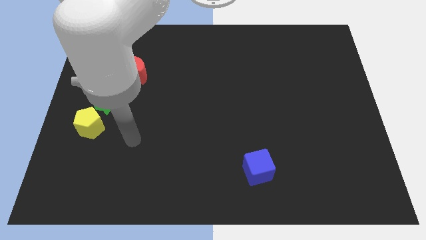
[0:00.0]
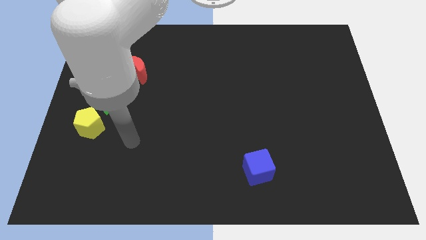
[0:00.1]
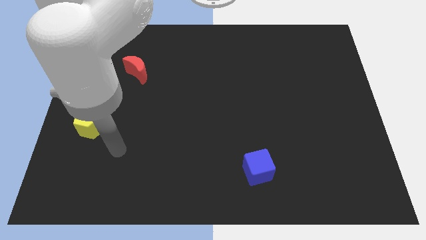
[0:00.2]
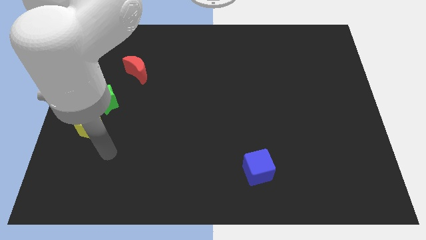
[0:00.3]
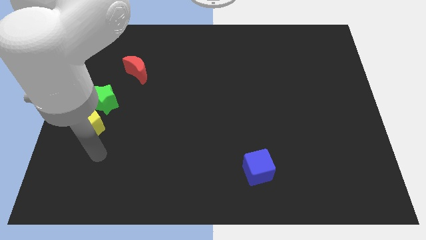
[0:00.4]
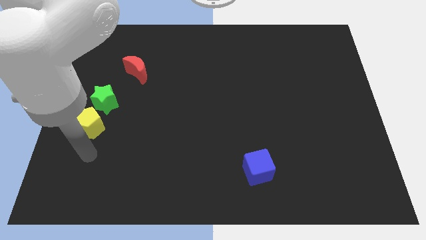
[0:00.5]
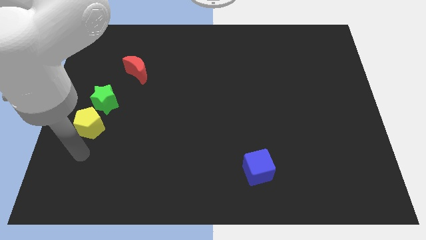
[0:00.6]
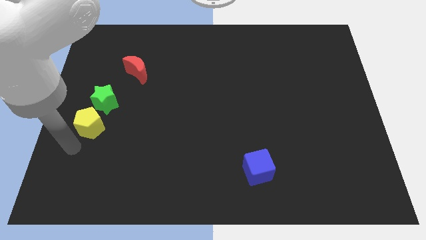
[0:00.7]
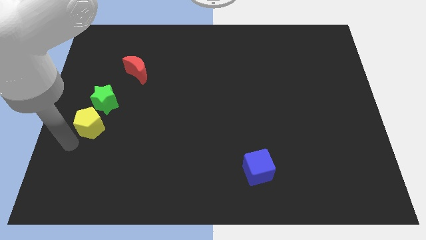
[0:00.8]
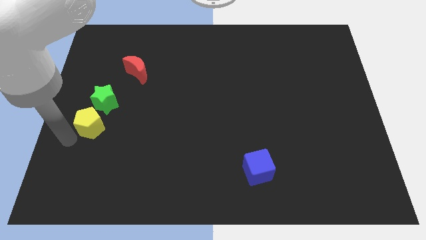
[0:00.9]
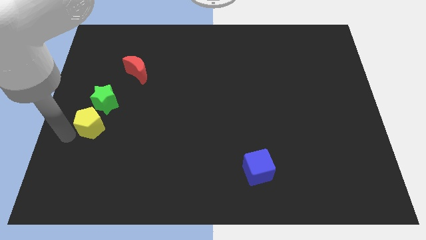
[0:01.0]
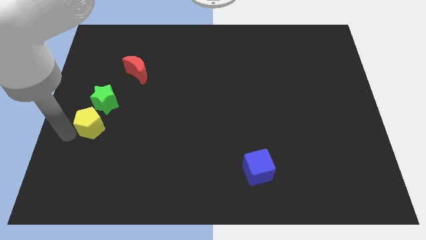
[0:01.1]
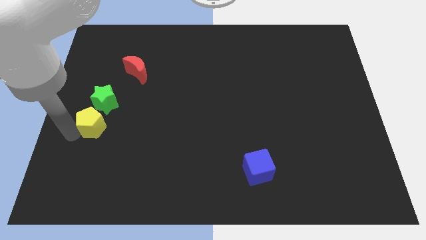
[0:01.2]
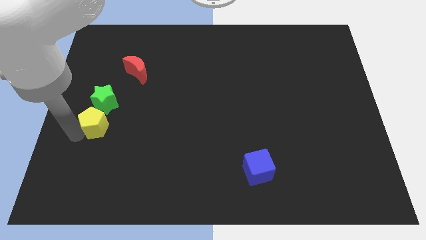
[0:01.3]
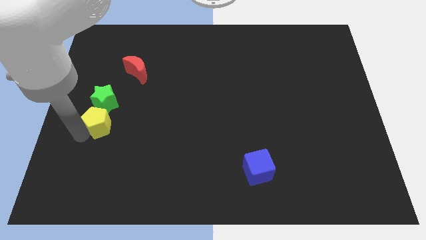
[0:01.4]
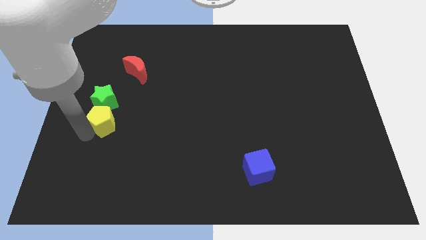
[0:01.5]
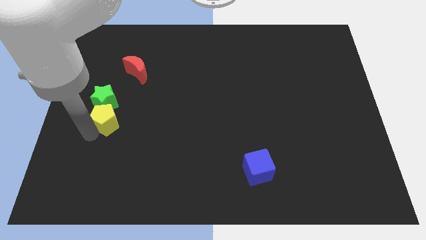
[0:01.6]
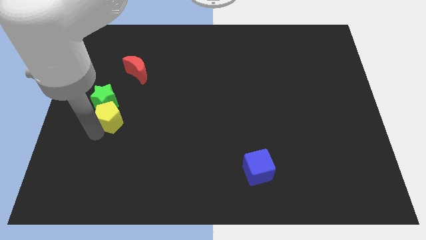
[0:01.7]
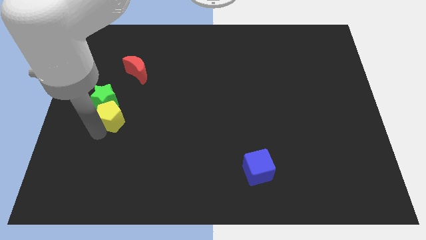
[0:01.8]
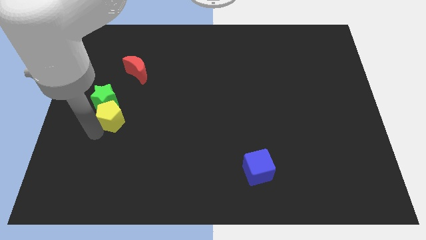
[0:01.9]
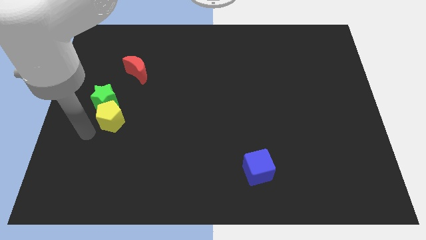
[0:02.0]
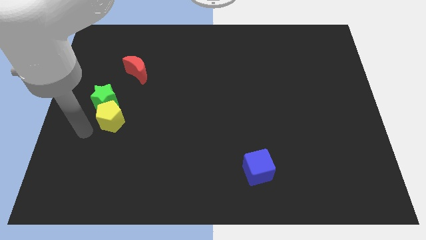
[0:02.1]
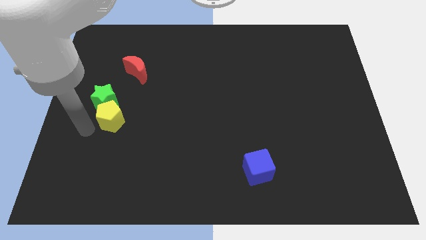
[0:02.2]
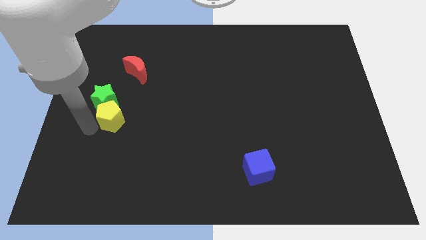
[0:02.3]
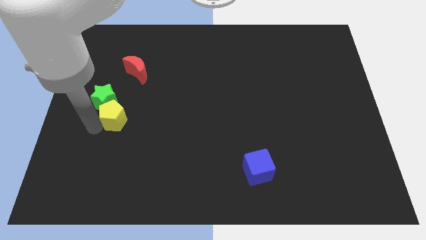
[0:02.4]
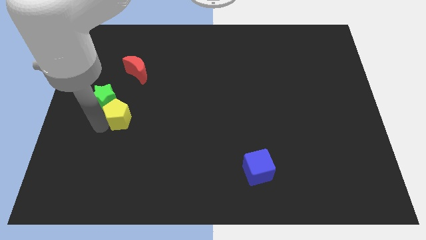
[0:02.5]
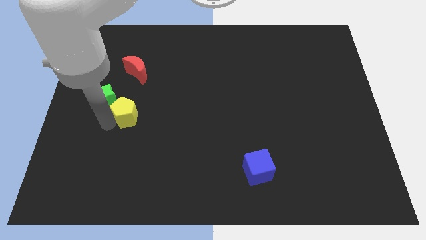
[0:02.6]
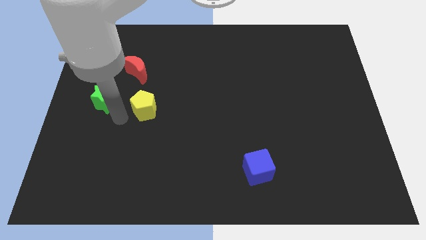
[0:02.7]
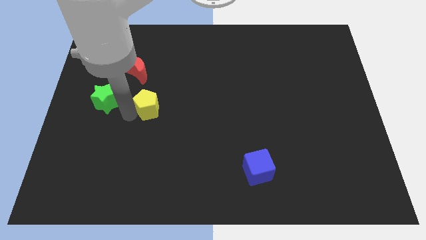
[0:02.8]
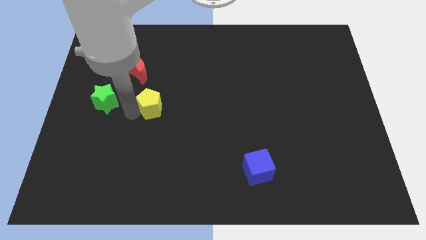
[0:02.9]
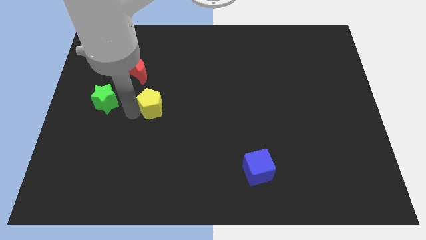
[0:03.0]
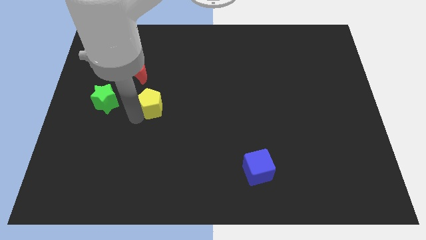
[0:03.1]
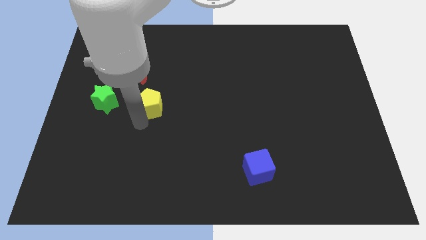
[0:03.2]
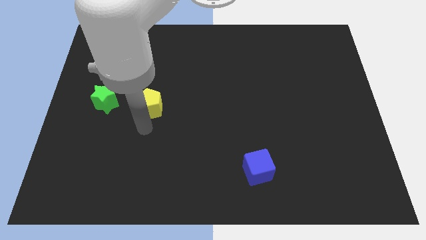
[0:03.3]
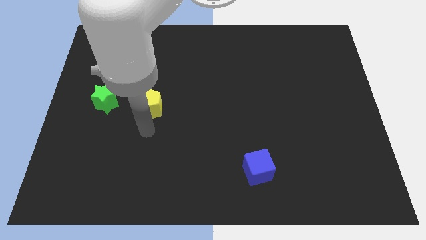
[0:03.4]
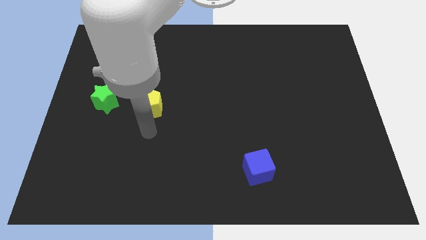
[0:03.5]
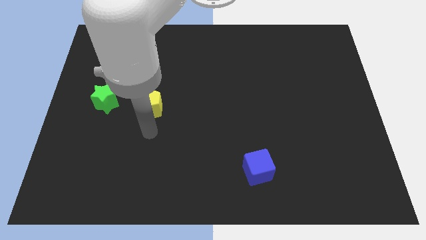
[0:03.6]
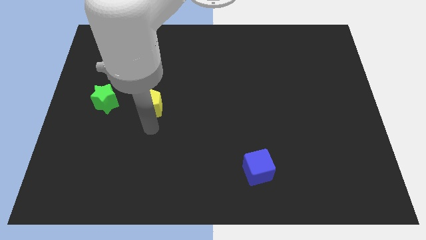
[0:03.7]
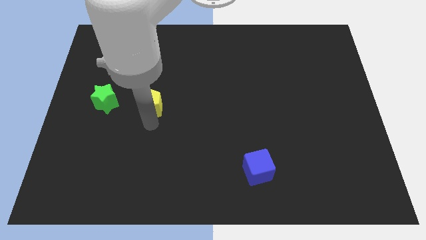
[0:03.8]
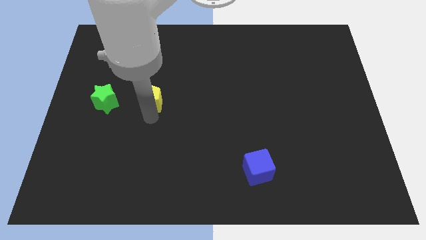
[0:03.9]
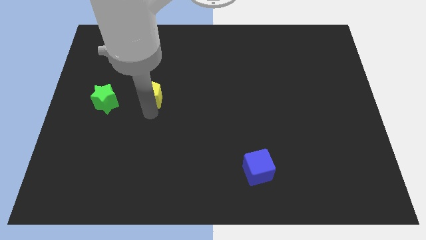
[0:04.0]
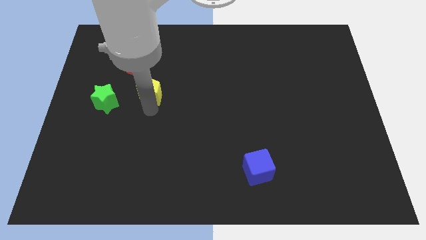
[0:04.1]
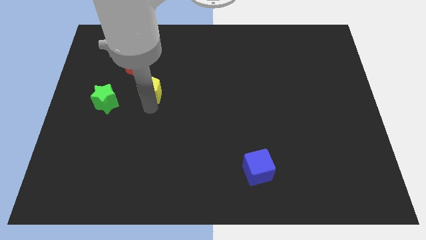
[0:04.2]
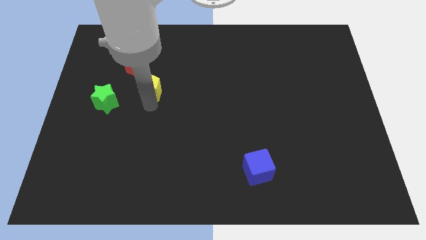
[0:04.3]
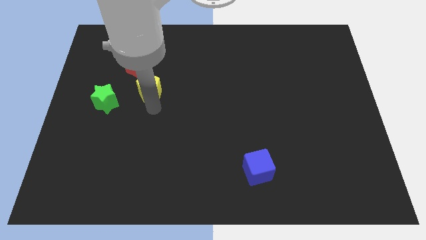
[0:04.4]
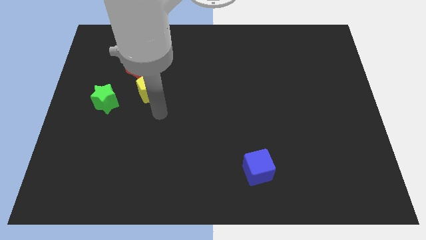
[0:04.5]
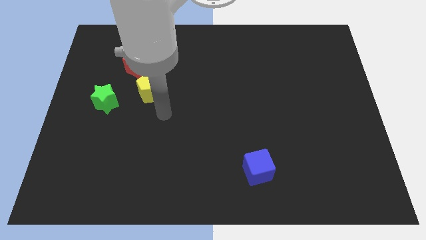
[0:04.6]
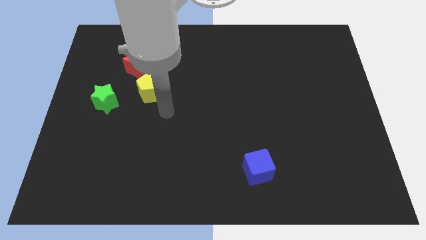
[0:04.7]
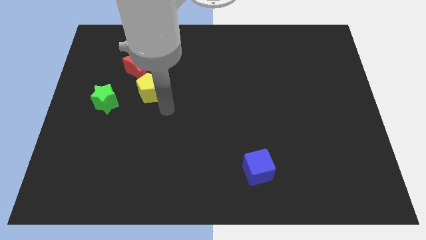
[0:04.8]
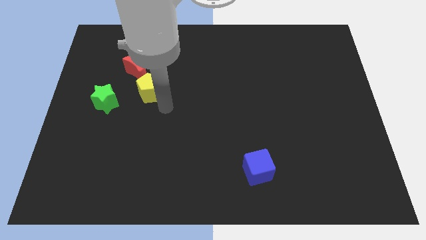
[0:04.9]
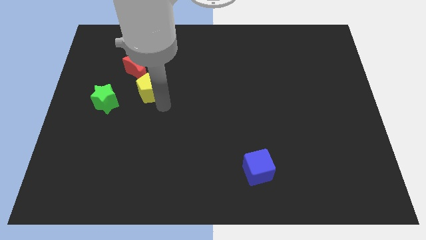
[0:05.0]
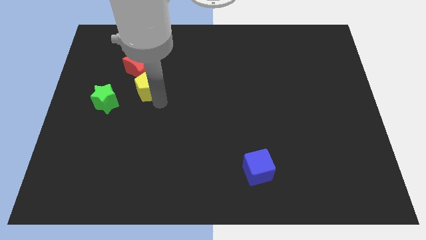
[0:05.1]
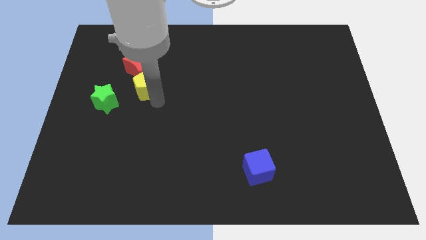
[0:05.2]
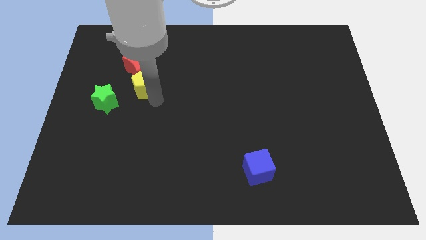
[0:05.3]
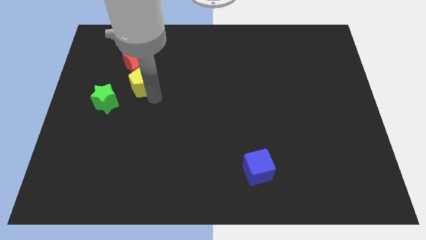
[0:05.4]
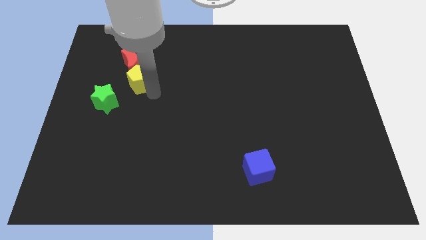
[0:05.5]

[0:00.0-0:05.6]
slide the yellow block to the red block

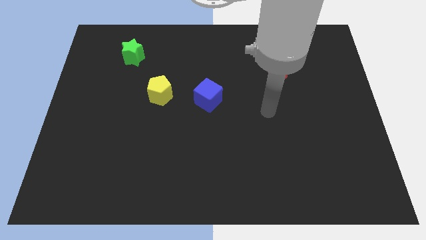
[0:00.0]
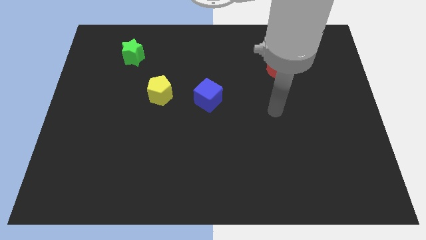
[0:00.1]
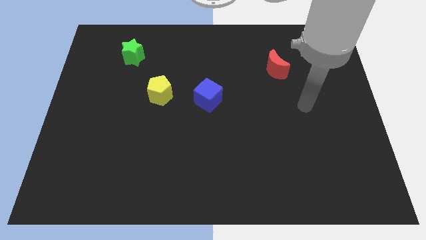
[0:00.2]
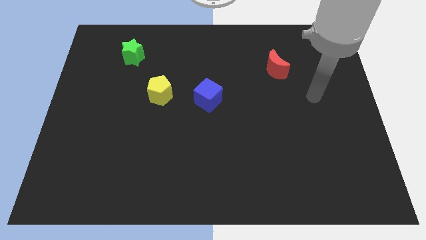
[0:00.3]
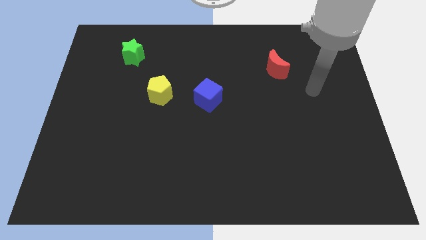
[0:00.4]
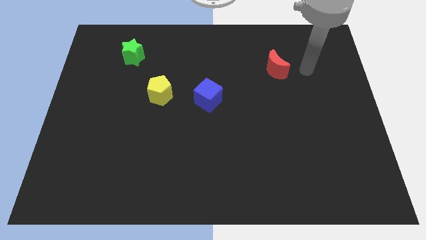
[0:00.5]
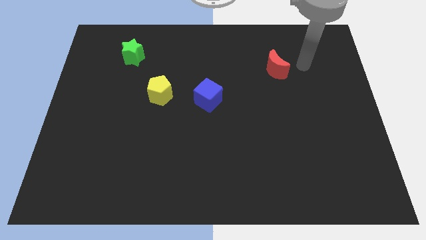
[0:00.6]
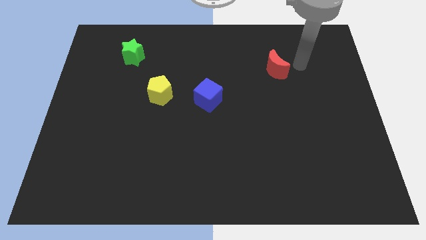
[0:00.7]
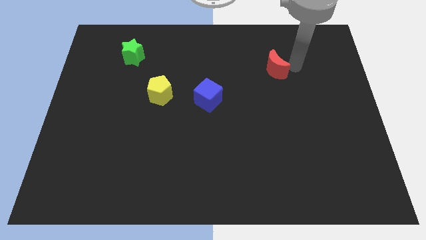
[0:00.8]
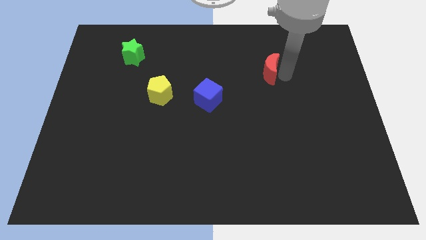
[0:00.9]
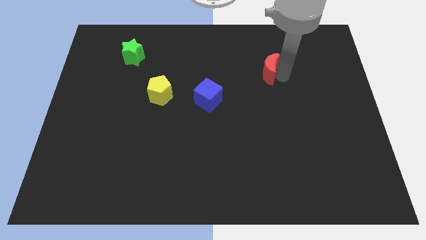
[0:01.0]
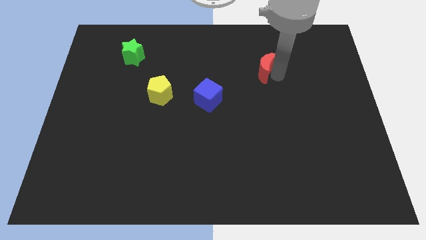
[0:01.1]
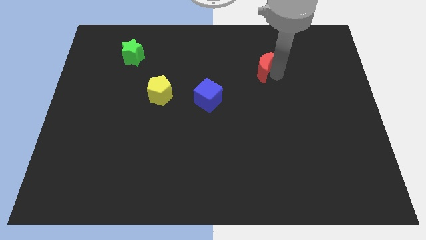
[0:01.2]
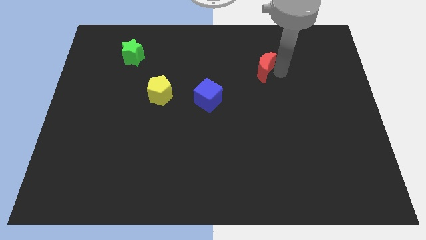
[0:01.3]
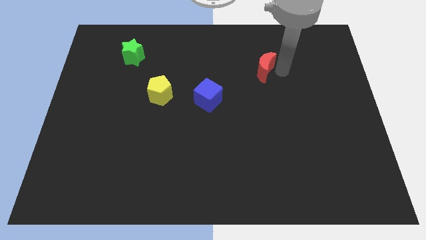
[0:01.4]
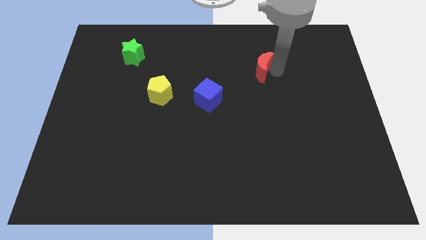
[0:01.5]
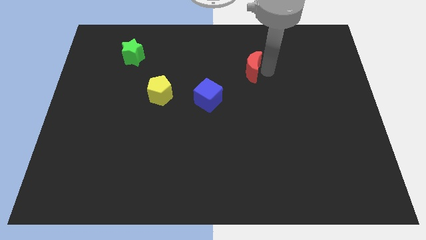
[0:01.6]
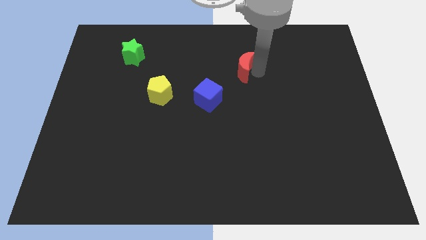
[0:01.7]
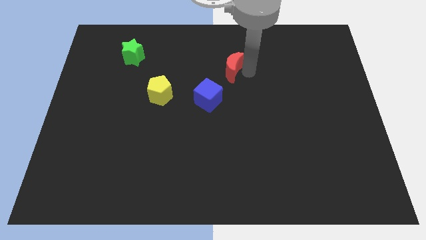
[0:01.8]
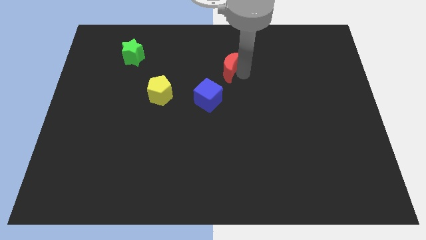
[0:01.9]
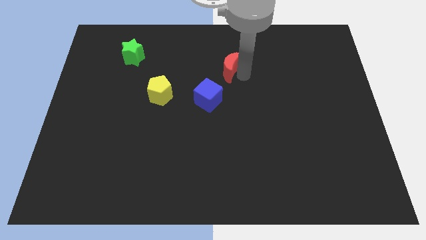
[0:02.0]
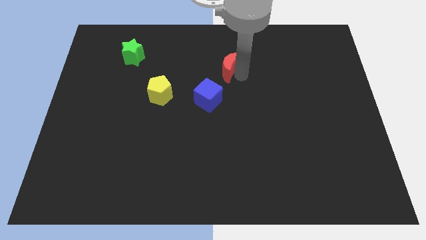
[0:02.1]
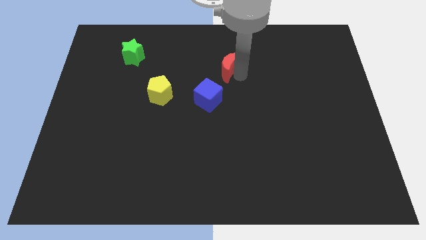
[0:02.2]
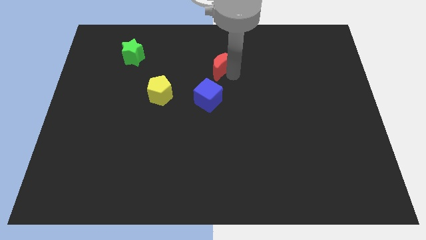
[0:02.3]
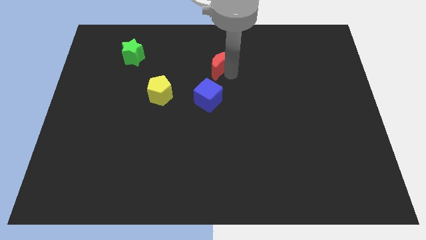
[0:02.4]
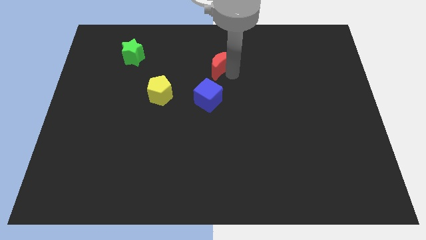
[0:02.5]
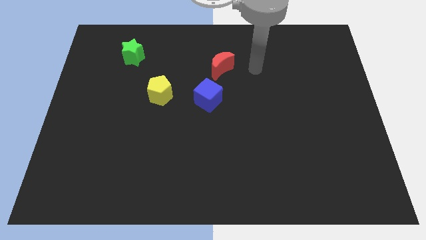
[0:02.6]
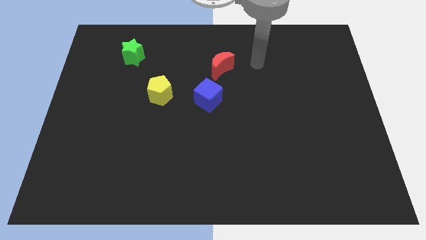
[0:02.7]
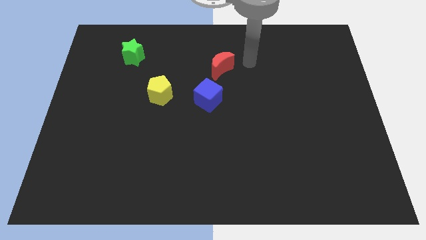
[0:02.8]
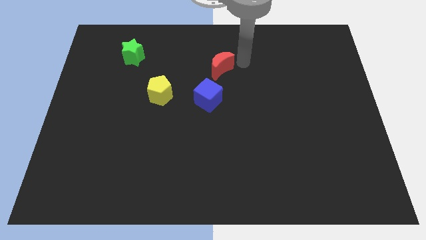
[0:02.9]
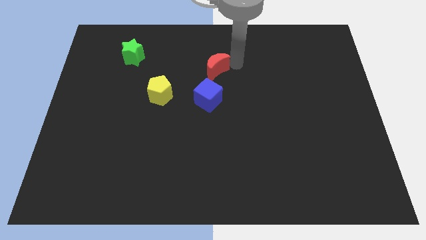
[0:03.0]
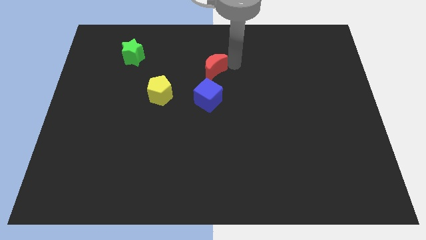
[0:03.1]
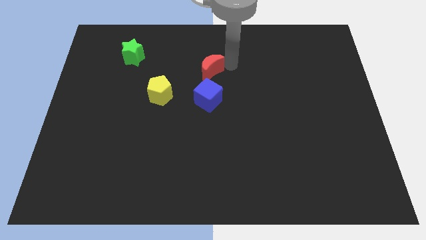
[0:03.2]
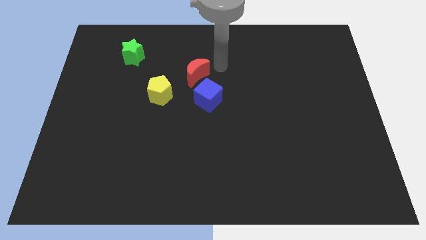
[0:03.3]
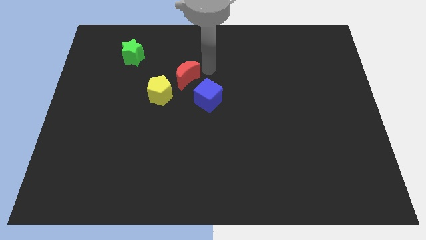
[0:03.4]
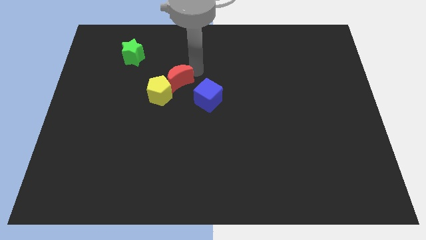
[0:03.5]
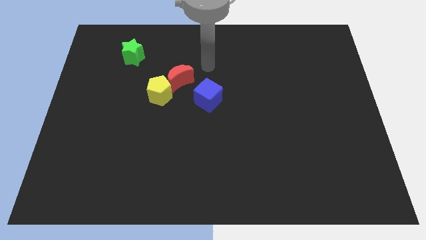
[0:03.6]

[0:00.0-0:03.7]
move the red block to the yellow block
